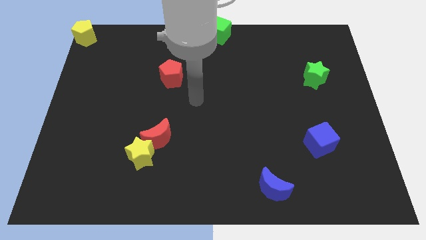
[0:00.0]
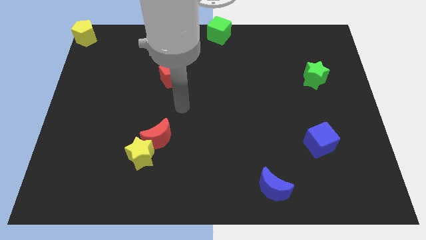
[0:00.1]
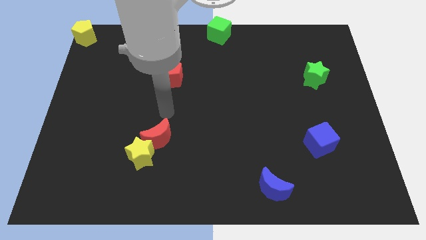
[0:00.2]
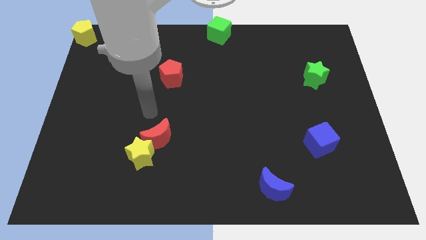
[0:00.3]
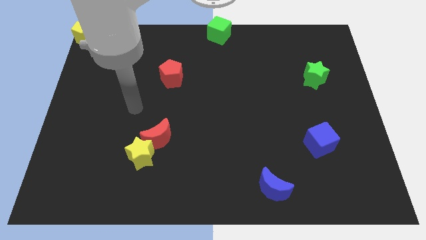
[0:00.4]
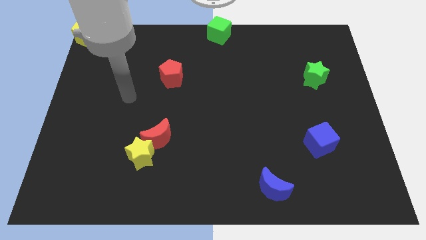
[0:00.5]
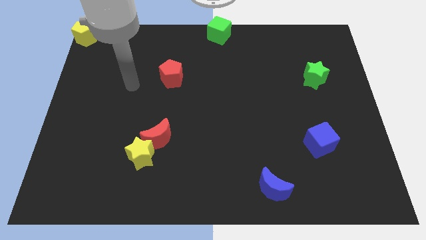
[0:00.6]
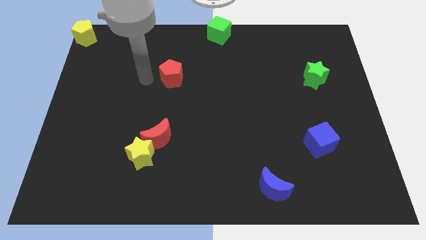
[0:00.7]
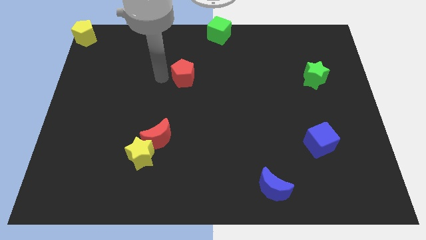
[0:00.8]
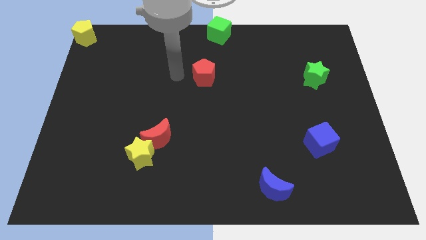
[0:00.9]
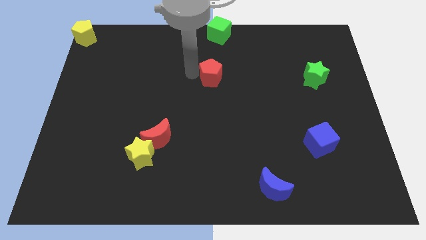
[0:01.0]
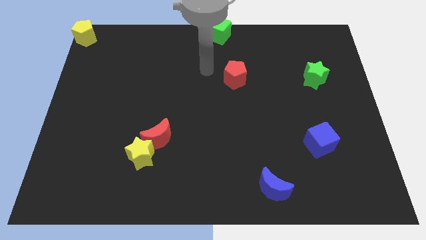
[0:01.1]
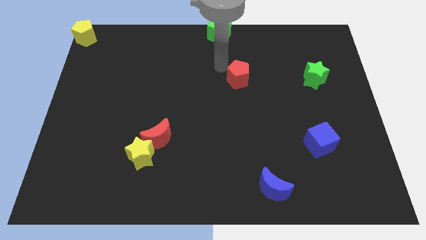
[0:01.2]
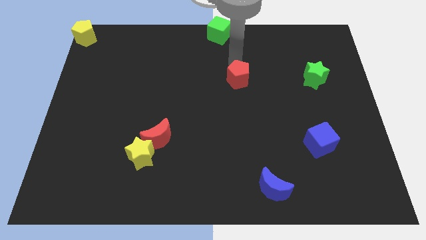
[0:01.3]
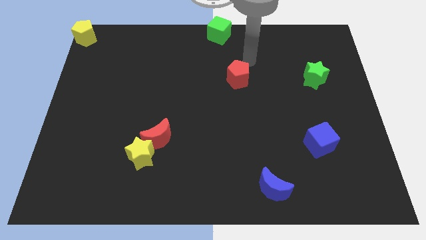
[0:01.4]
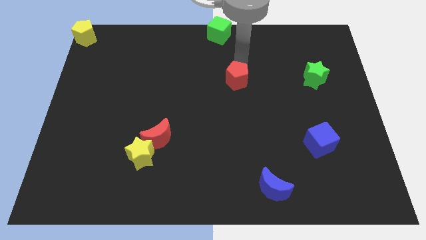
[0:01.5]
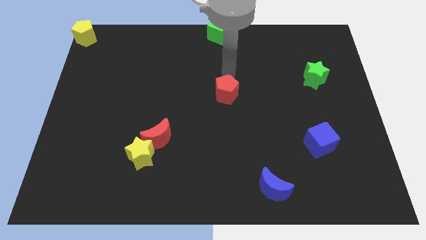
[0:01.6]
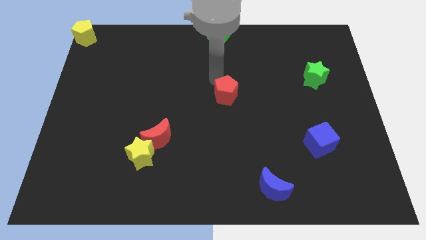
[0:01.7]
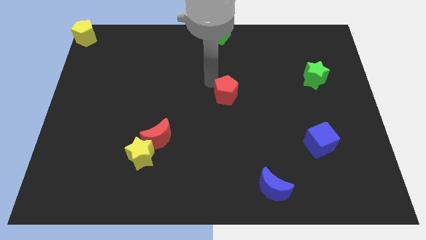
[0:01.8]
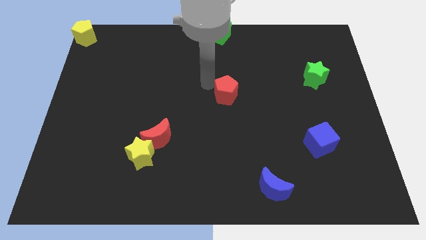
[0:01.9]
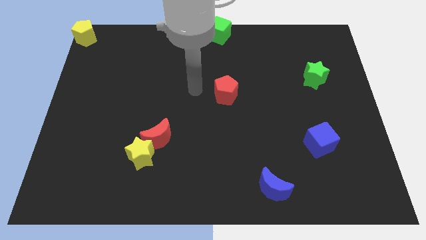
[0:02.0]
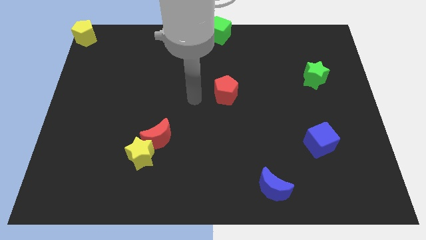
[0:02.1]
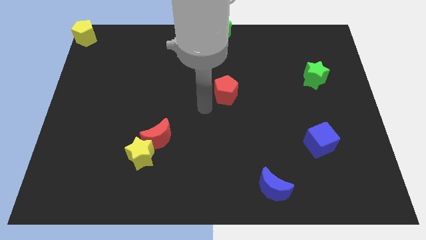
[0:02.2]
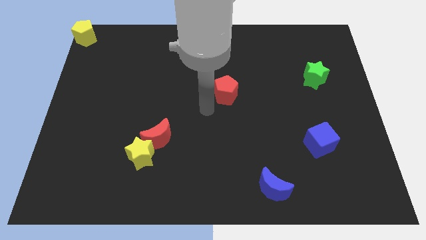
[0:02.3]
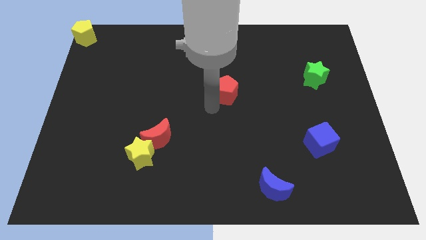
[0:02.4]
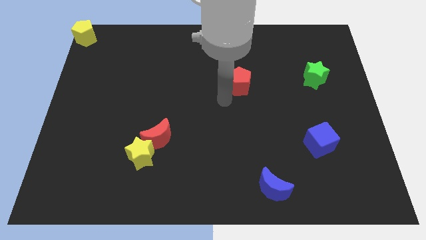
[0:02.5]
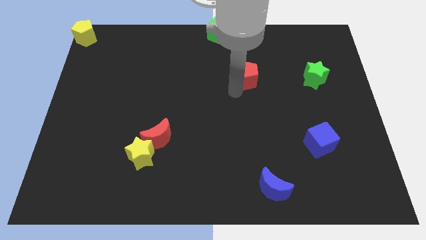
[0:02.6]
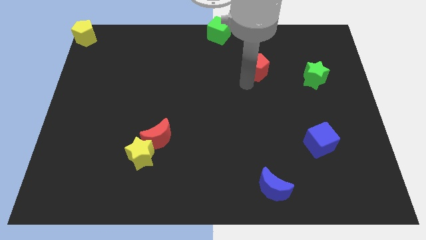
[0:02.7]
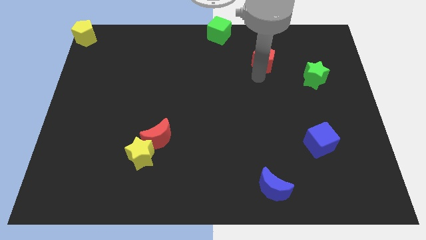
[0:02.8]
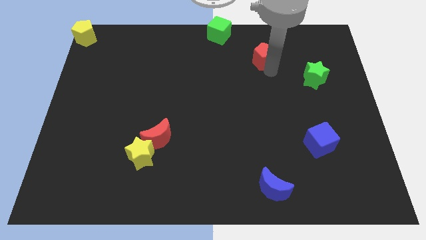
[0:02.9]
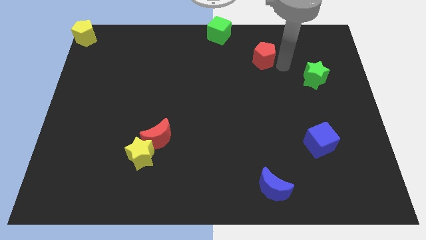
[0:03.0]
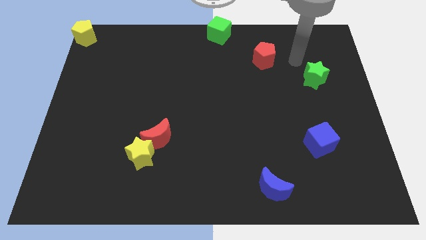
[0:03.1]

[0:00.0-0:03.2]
push the red pentagon between green blocks diagonally

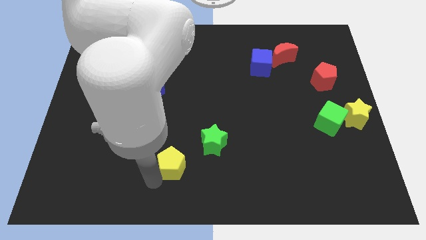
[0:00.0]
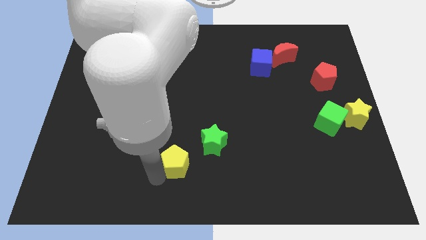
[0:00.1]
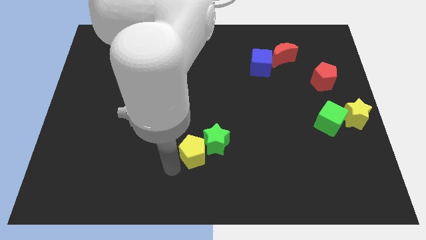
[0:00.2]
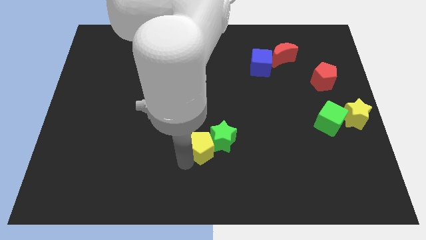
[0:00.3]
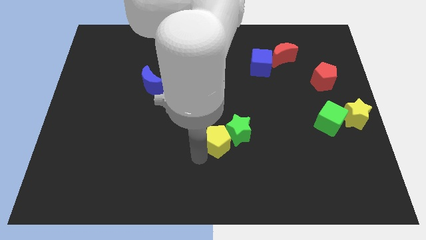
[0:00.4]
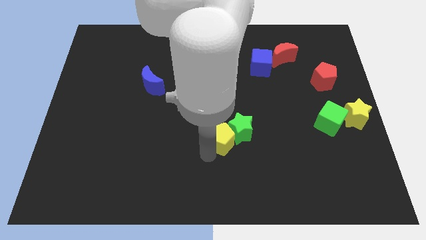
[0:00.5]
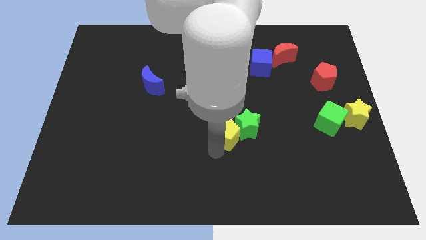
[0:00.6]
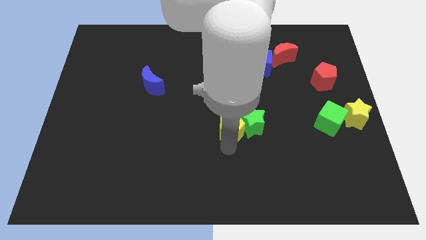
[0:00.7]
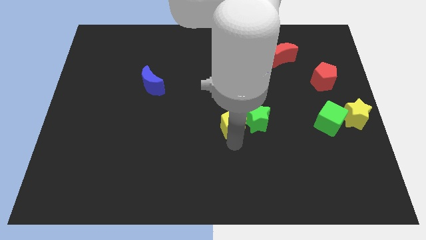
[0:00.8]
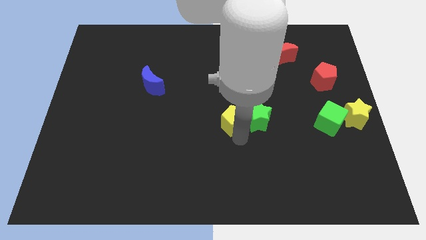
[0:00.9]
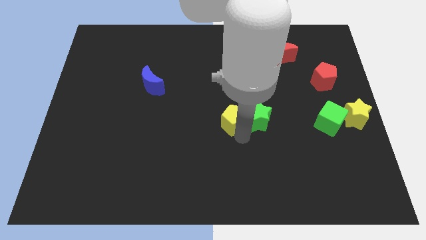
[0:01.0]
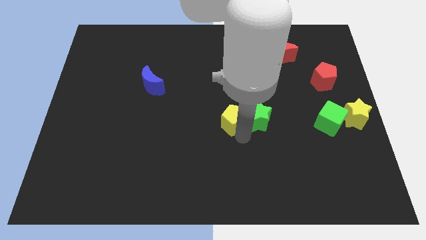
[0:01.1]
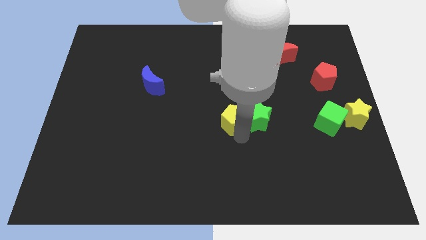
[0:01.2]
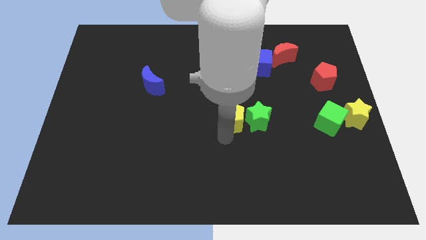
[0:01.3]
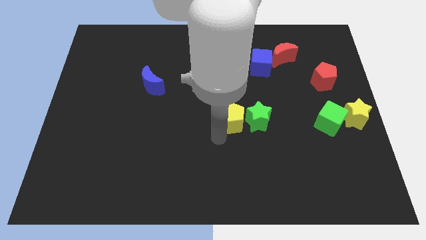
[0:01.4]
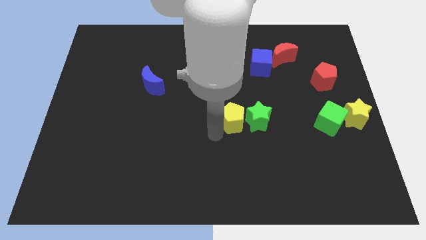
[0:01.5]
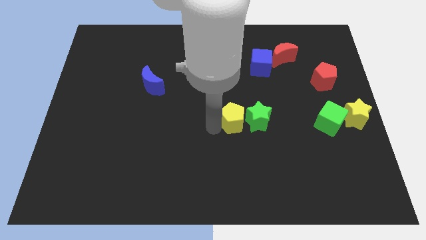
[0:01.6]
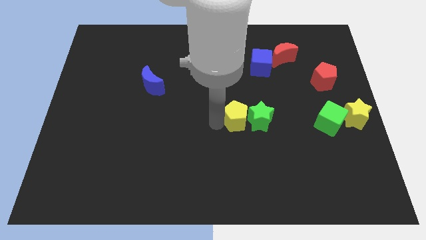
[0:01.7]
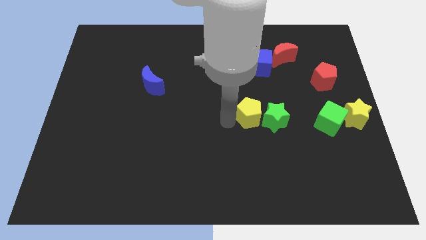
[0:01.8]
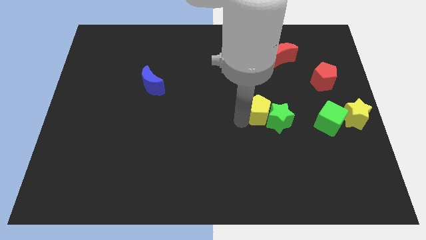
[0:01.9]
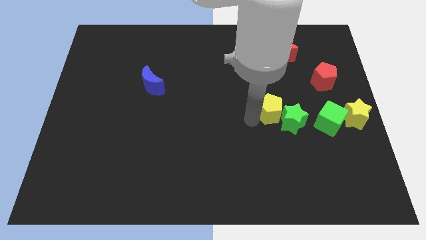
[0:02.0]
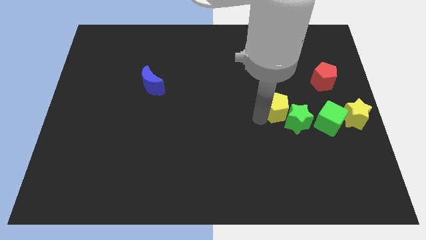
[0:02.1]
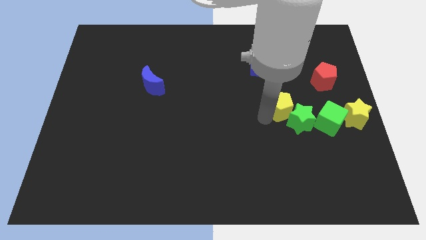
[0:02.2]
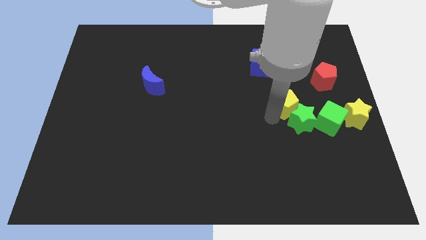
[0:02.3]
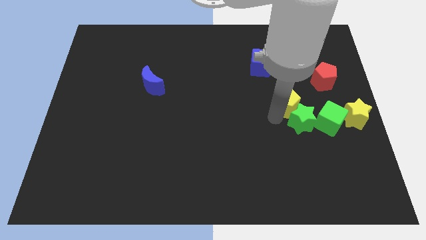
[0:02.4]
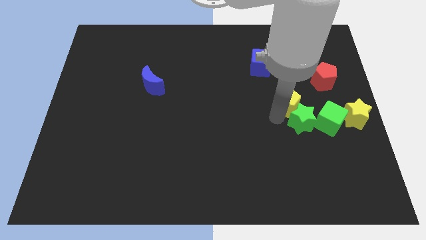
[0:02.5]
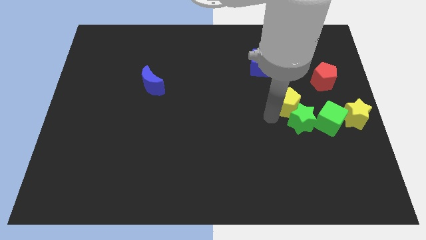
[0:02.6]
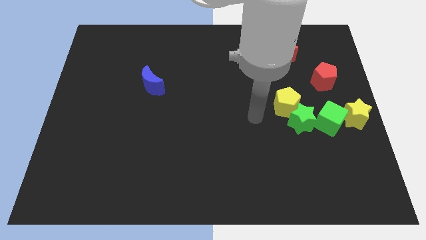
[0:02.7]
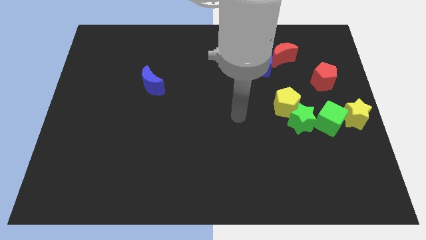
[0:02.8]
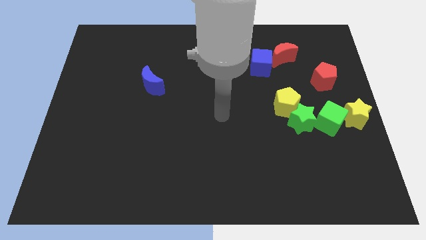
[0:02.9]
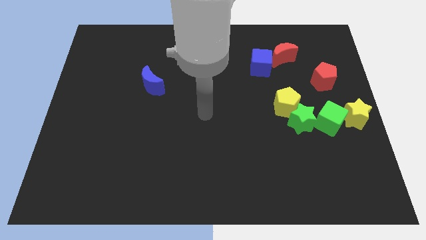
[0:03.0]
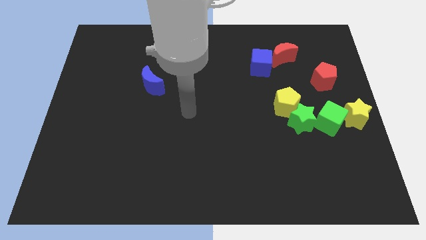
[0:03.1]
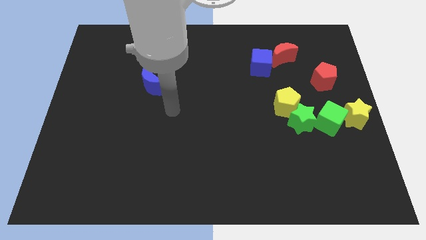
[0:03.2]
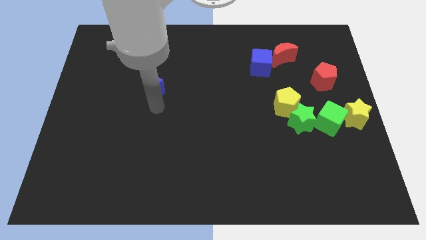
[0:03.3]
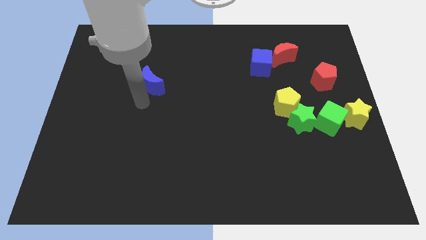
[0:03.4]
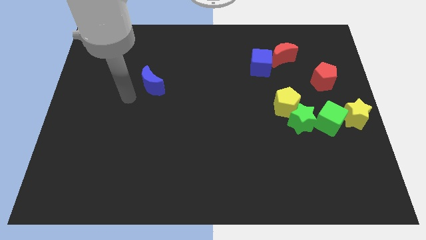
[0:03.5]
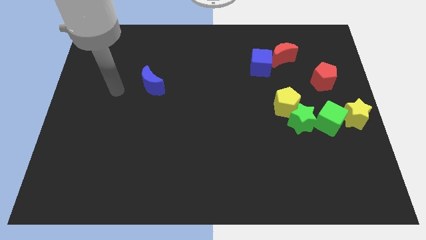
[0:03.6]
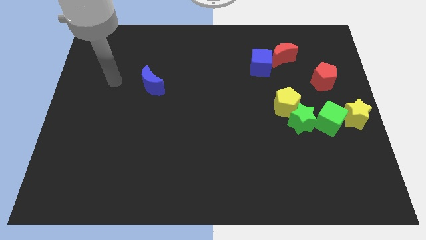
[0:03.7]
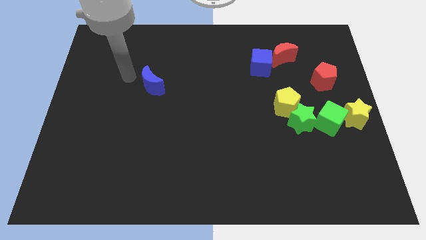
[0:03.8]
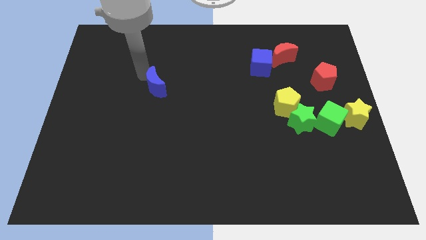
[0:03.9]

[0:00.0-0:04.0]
place the yellow pentagon above the green star

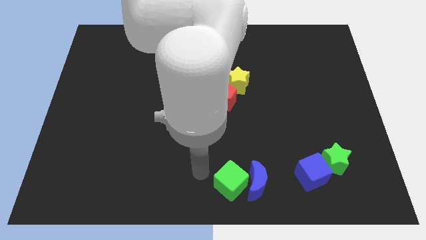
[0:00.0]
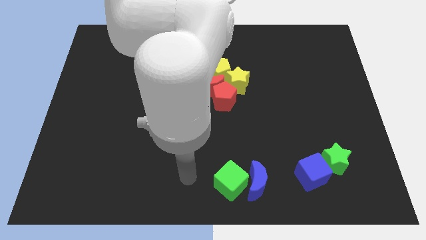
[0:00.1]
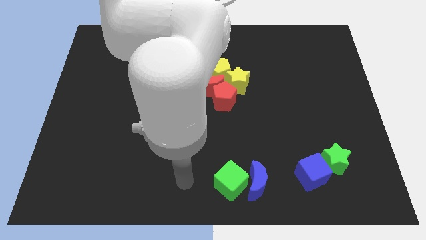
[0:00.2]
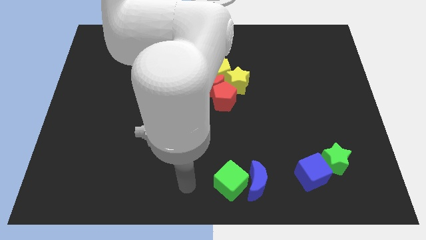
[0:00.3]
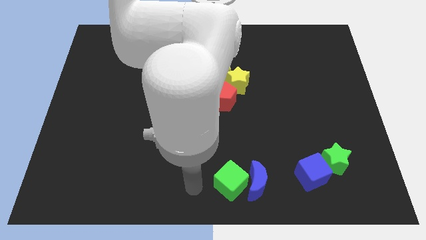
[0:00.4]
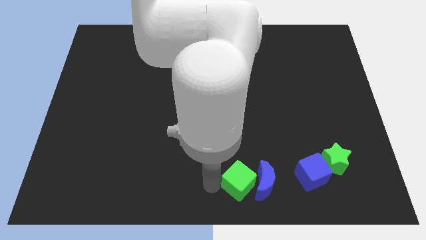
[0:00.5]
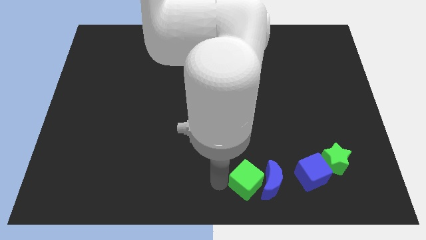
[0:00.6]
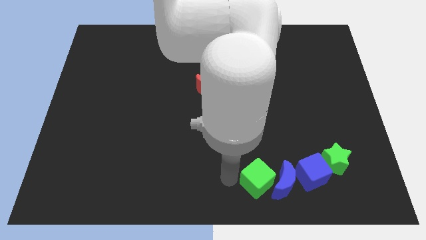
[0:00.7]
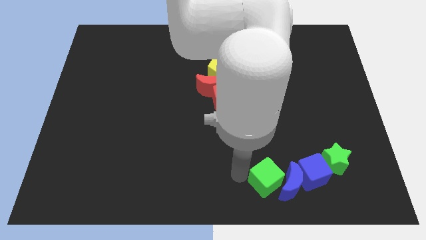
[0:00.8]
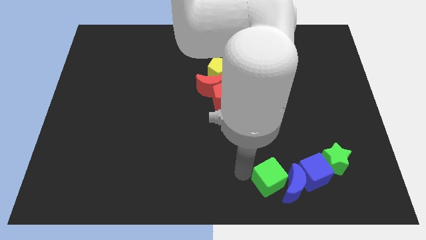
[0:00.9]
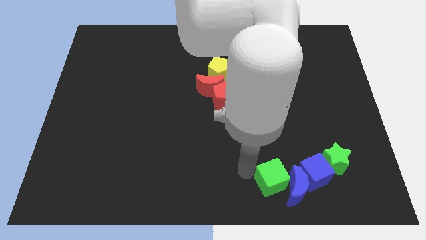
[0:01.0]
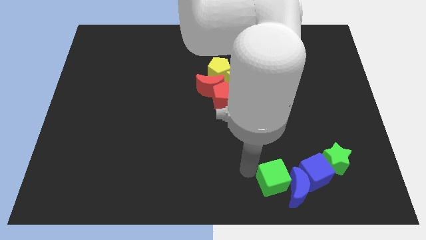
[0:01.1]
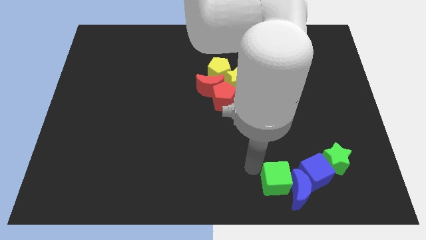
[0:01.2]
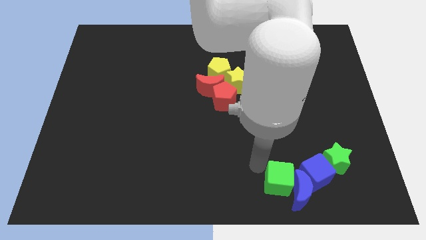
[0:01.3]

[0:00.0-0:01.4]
push blue crescent and green cube towards blue cube
